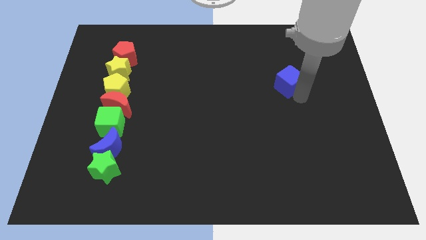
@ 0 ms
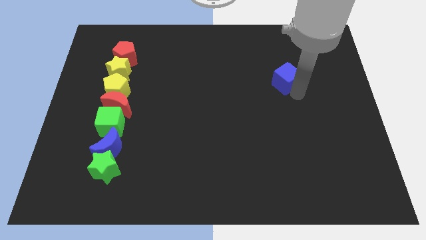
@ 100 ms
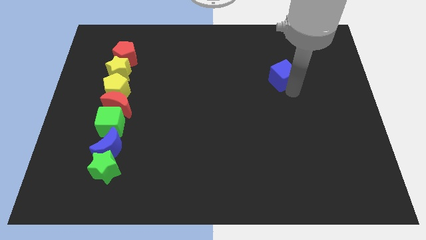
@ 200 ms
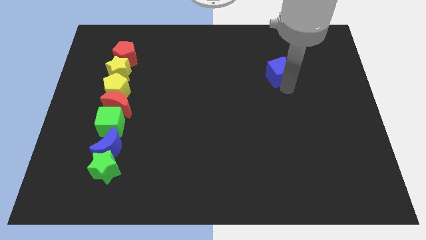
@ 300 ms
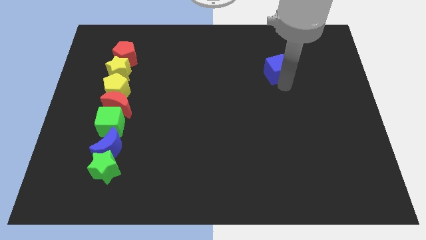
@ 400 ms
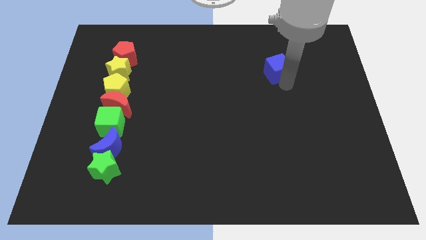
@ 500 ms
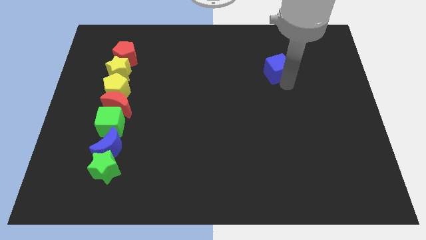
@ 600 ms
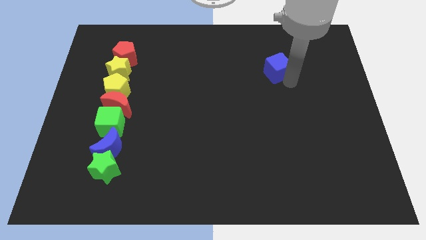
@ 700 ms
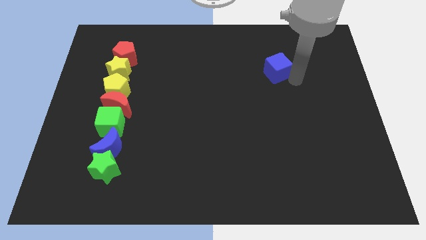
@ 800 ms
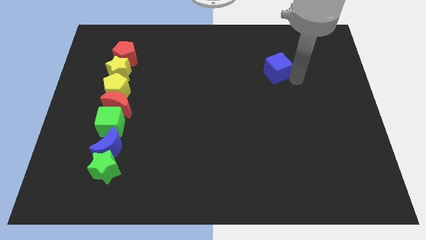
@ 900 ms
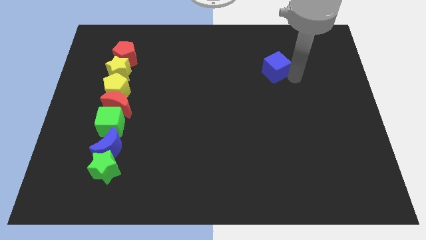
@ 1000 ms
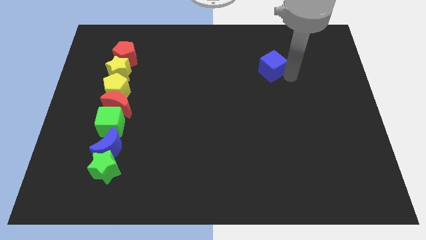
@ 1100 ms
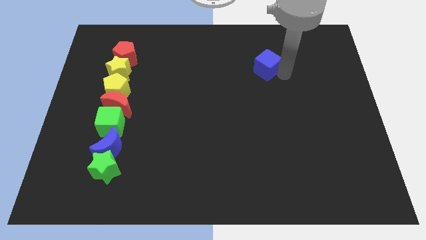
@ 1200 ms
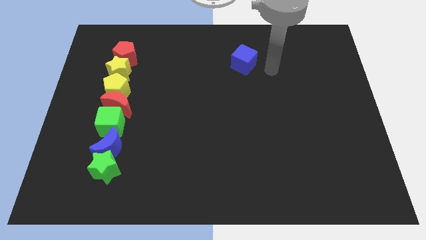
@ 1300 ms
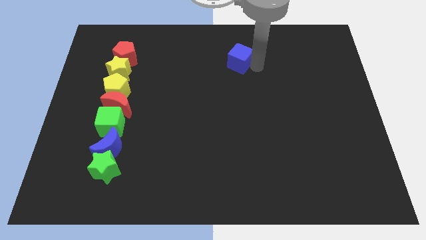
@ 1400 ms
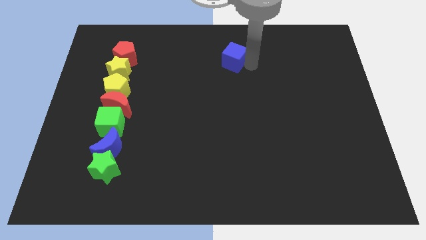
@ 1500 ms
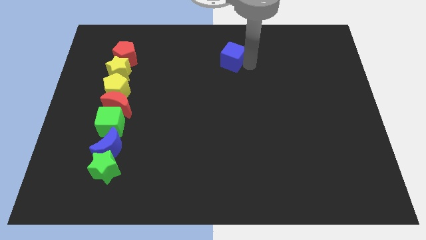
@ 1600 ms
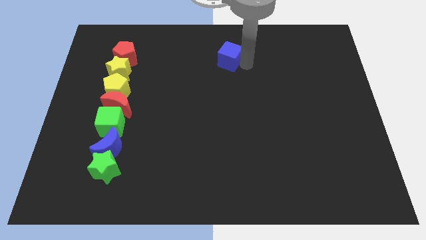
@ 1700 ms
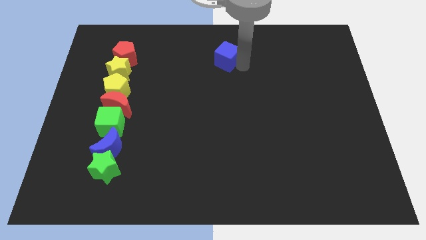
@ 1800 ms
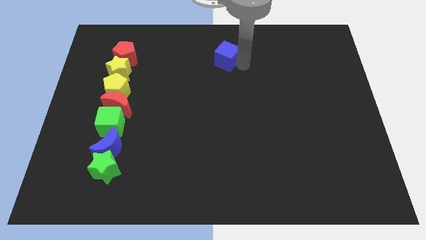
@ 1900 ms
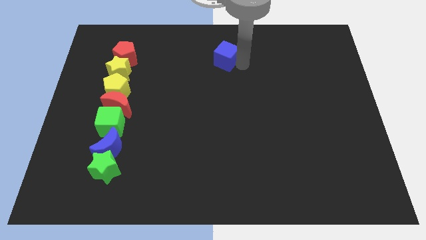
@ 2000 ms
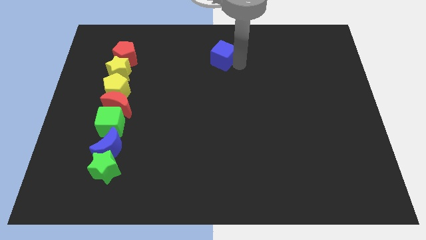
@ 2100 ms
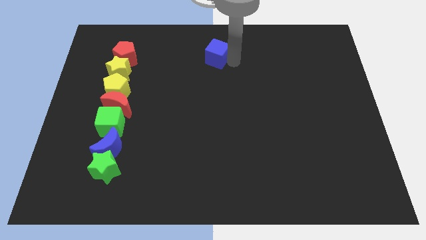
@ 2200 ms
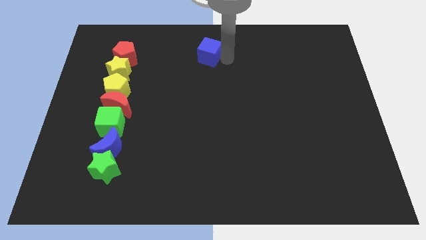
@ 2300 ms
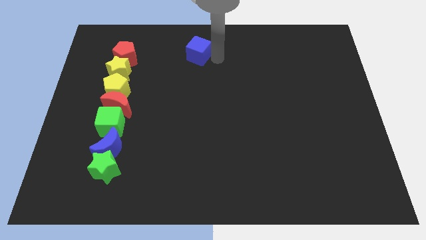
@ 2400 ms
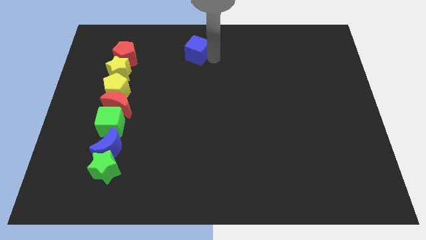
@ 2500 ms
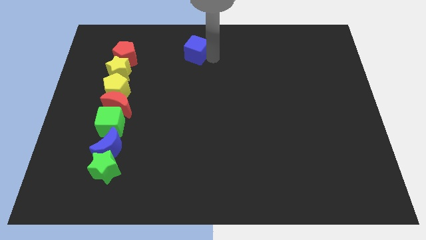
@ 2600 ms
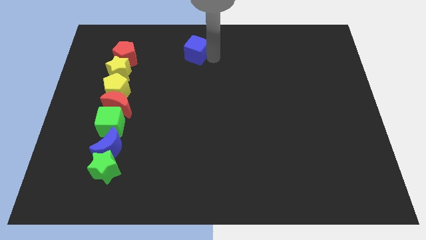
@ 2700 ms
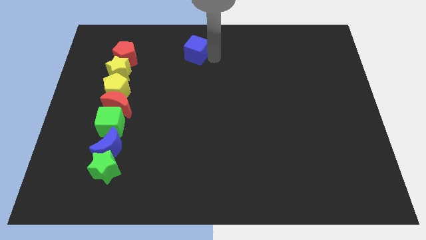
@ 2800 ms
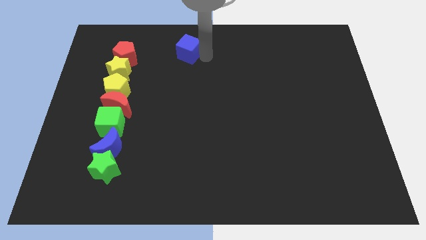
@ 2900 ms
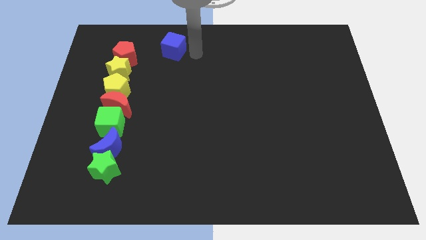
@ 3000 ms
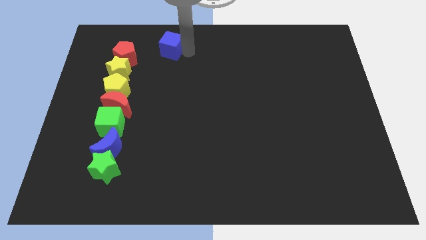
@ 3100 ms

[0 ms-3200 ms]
push blue cube to the left

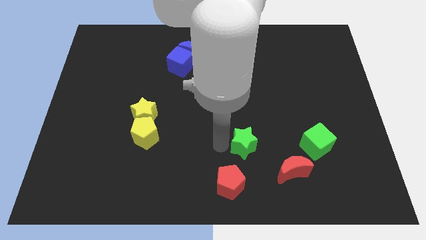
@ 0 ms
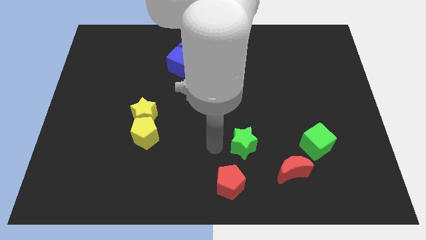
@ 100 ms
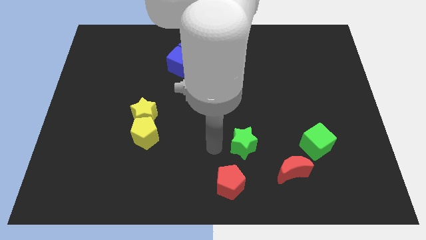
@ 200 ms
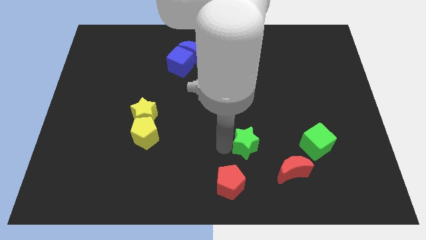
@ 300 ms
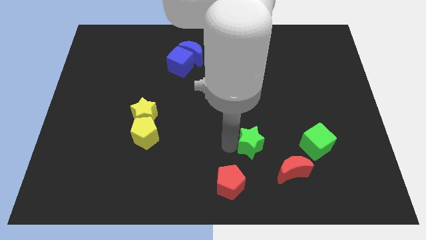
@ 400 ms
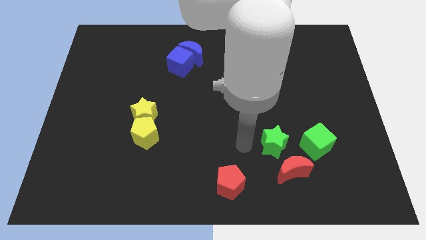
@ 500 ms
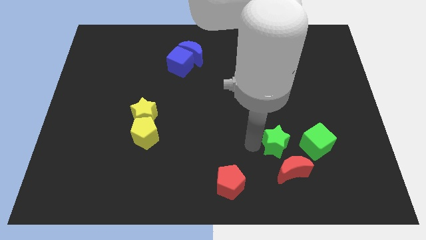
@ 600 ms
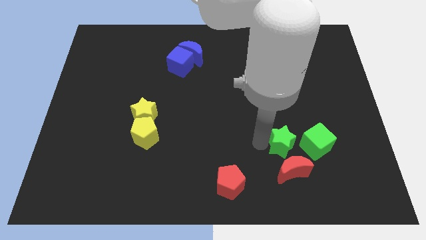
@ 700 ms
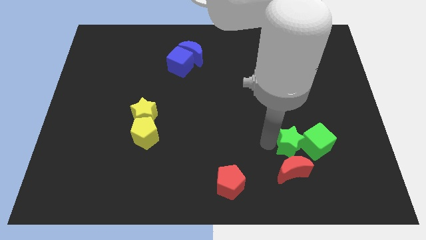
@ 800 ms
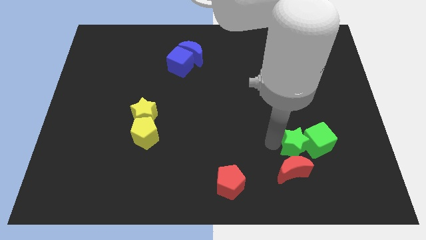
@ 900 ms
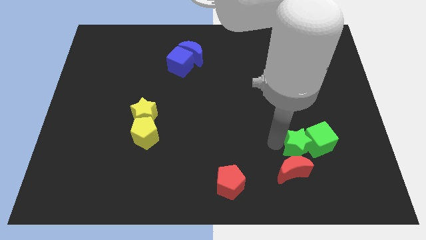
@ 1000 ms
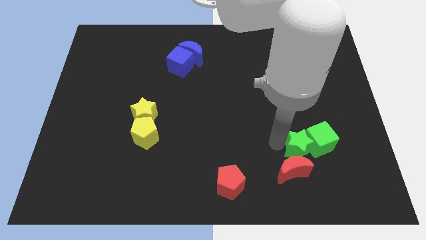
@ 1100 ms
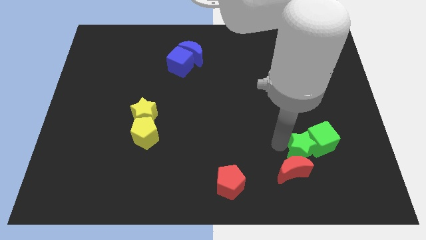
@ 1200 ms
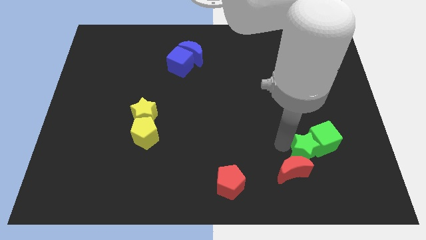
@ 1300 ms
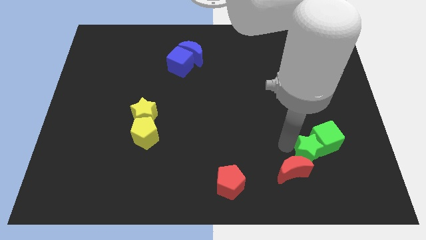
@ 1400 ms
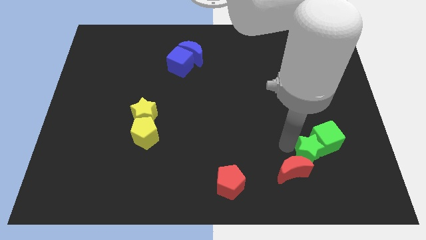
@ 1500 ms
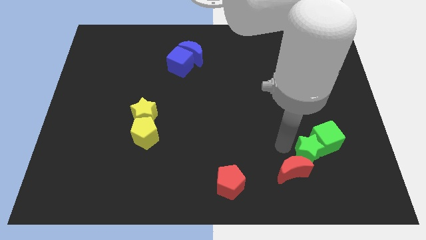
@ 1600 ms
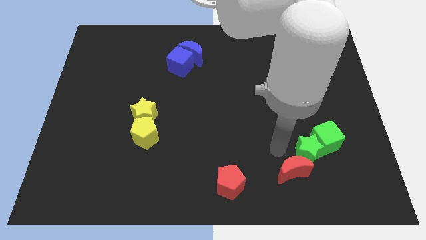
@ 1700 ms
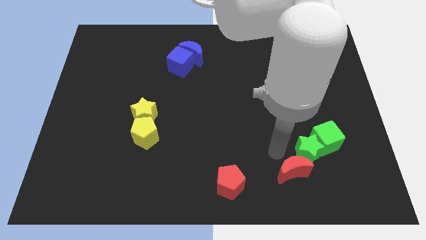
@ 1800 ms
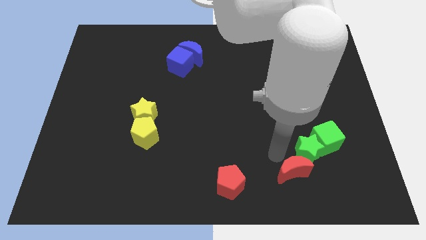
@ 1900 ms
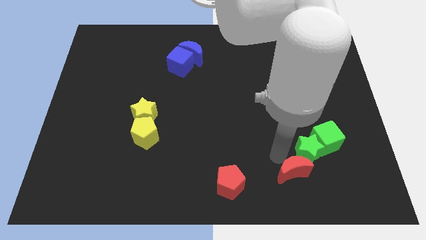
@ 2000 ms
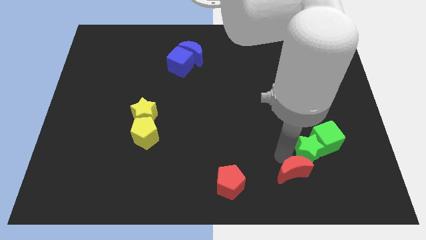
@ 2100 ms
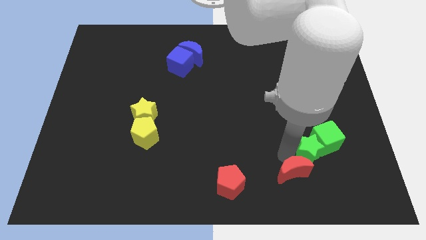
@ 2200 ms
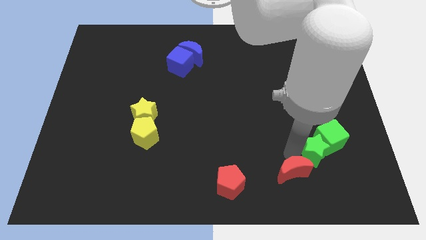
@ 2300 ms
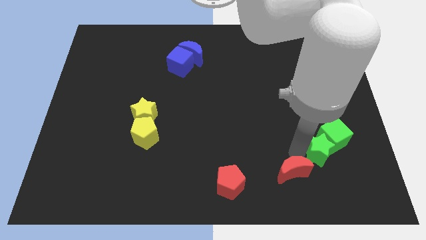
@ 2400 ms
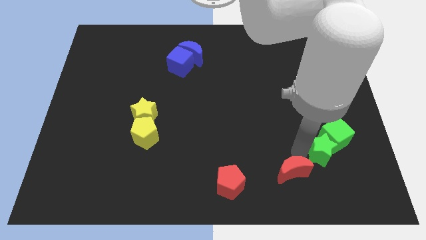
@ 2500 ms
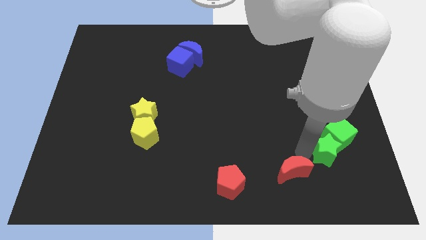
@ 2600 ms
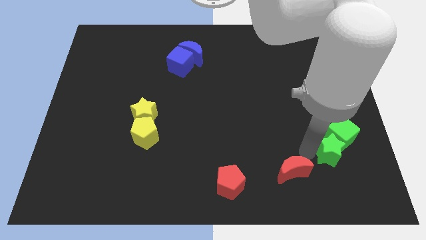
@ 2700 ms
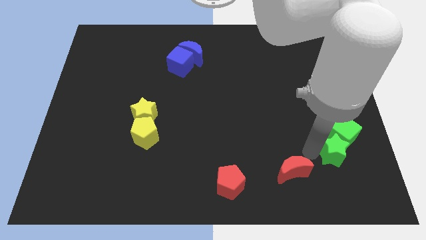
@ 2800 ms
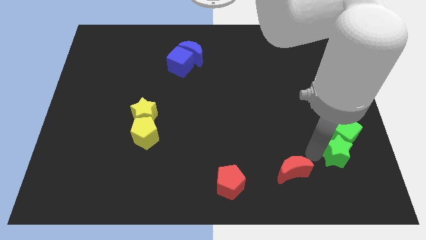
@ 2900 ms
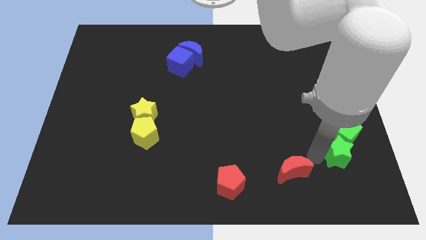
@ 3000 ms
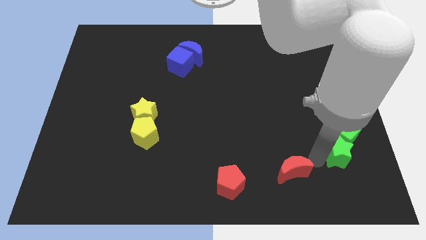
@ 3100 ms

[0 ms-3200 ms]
move the green star into the green cube

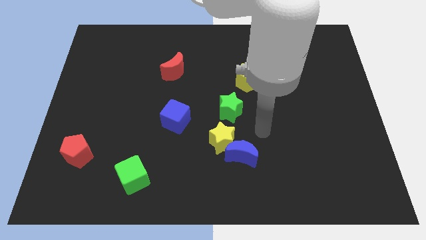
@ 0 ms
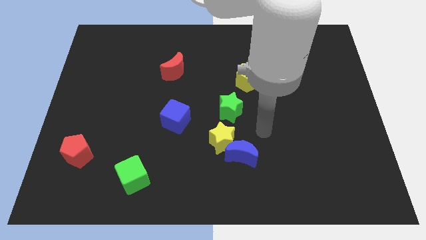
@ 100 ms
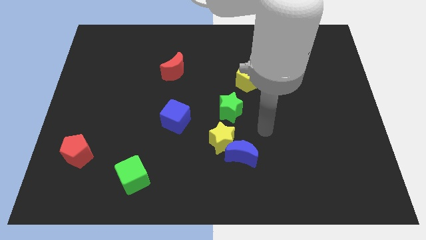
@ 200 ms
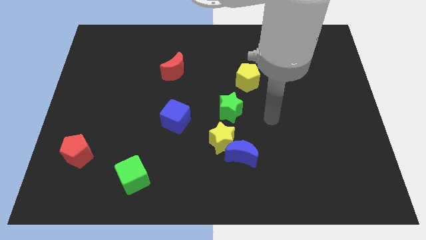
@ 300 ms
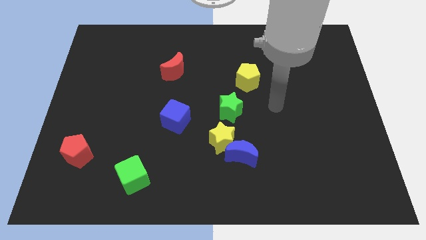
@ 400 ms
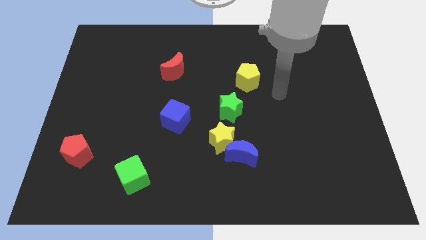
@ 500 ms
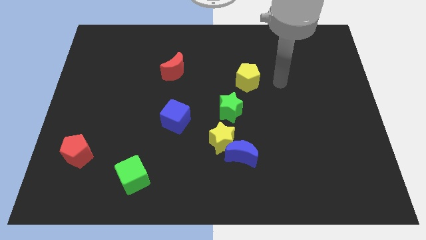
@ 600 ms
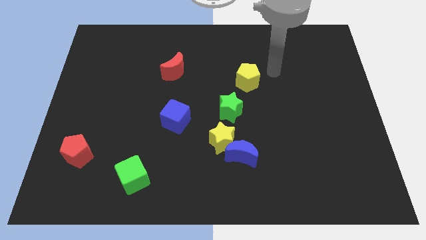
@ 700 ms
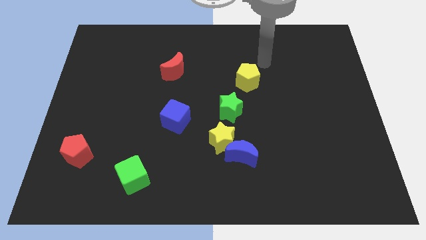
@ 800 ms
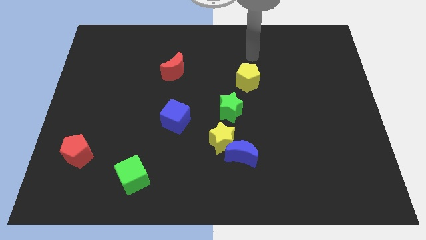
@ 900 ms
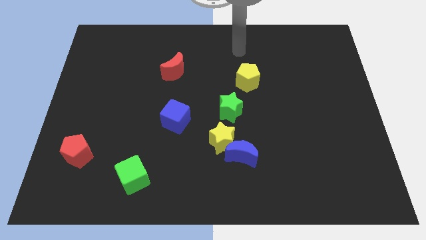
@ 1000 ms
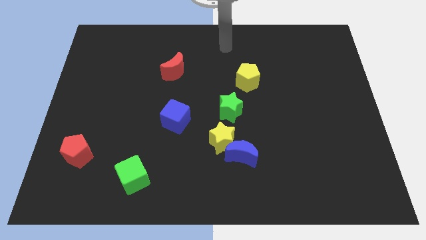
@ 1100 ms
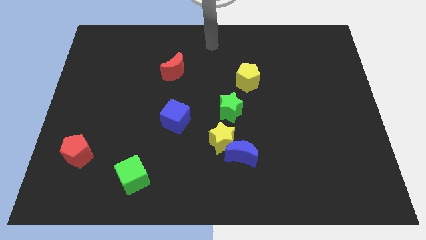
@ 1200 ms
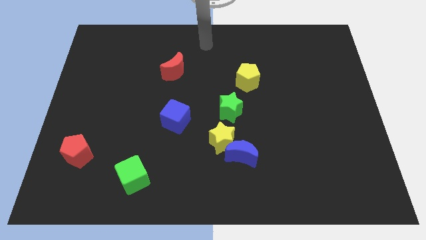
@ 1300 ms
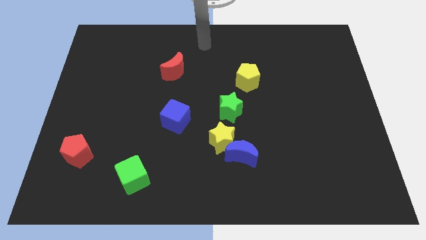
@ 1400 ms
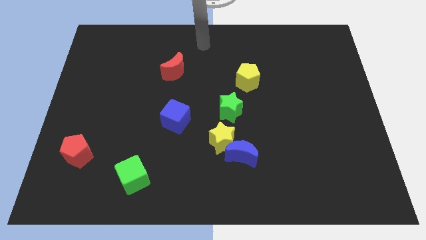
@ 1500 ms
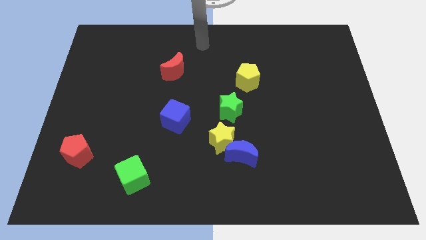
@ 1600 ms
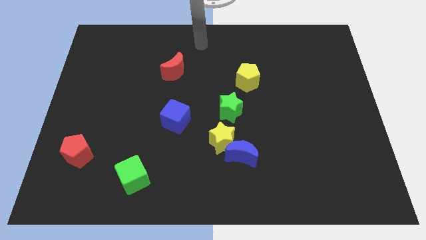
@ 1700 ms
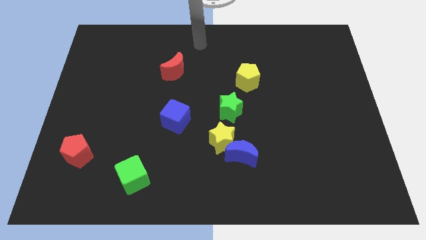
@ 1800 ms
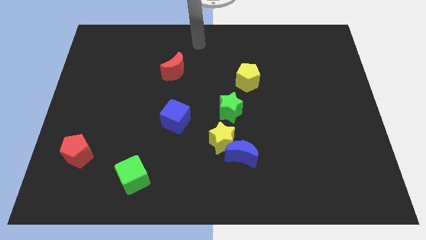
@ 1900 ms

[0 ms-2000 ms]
move your arm towards the top center of the board

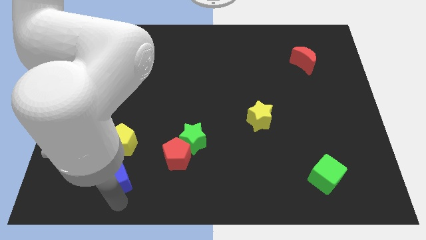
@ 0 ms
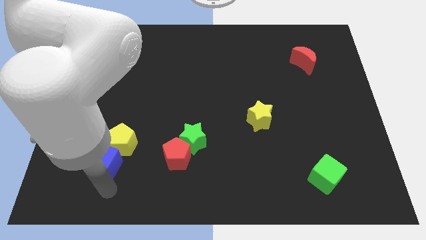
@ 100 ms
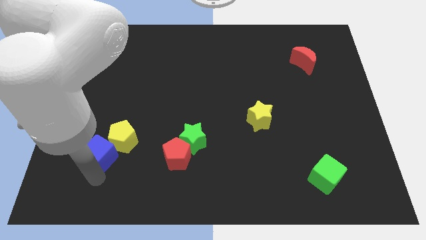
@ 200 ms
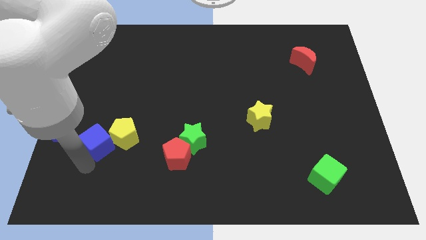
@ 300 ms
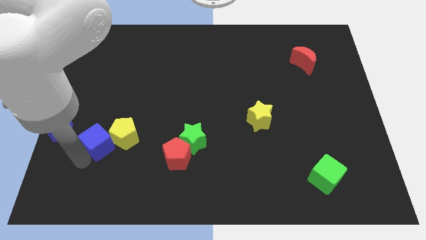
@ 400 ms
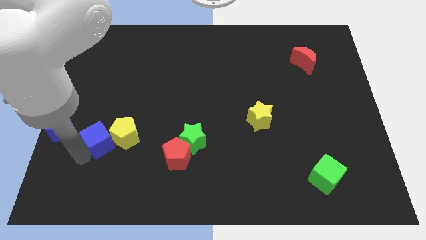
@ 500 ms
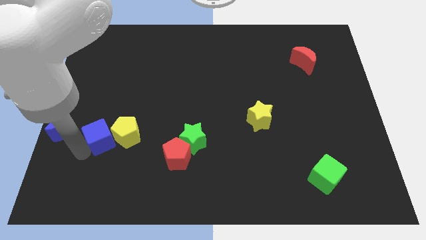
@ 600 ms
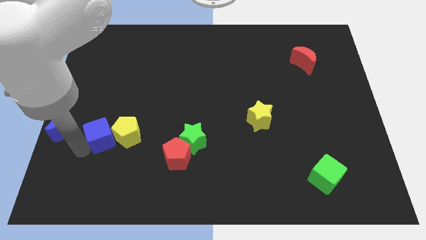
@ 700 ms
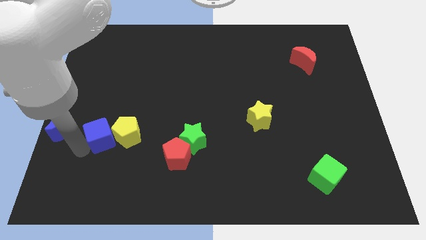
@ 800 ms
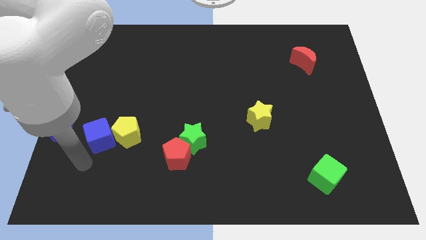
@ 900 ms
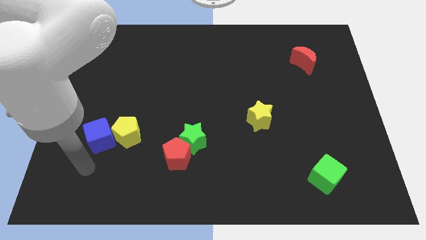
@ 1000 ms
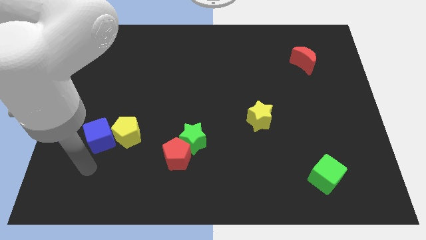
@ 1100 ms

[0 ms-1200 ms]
place the blue cube to the left side of the yellow pentagon
